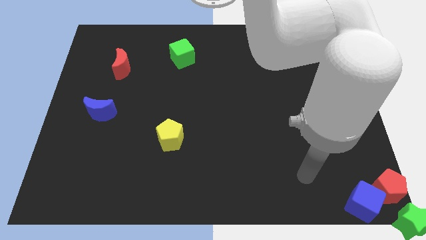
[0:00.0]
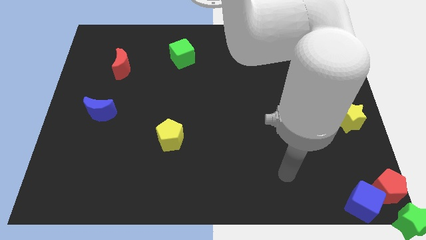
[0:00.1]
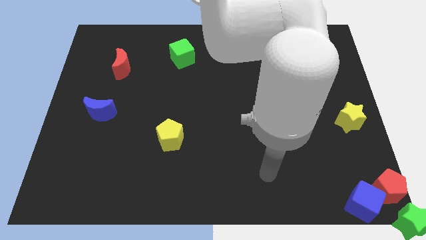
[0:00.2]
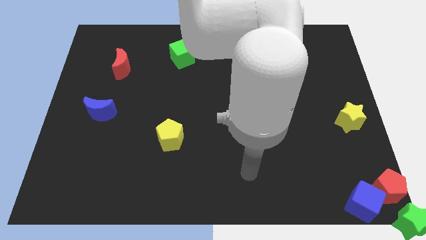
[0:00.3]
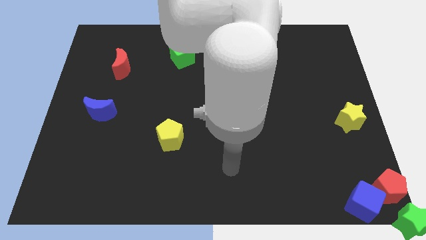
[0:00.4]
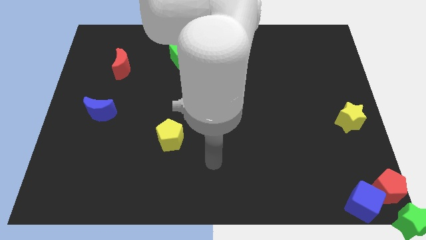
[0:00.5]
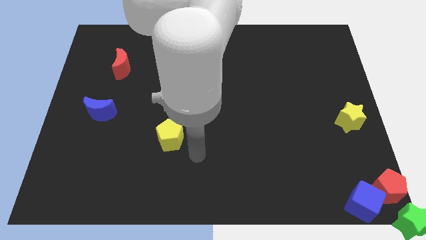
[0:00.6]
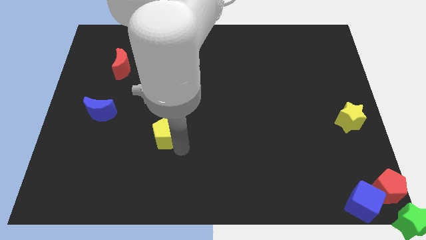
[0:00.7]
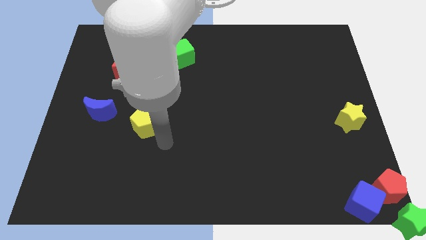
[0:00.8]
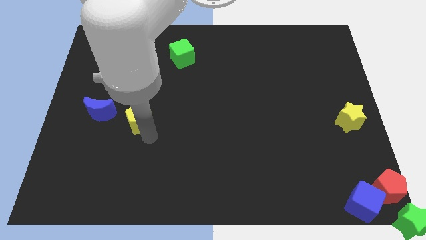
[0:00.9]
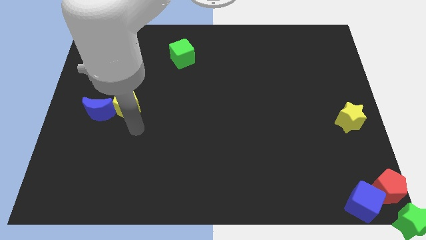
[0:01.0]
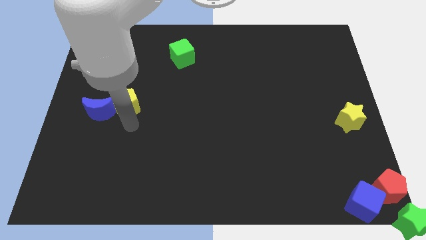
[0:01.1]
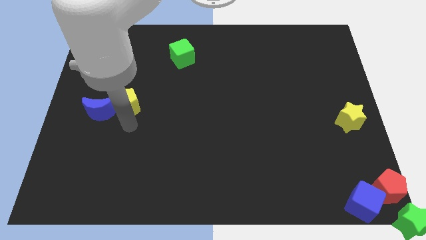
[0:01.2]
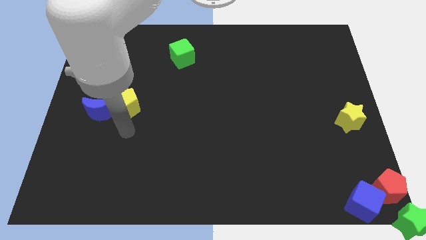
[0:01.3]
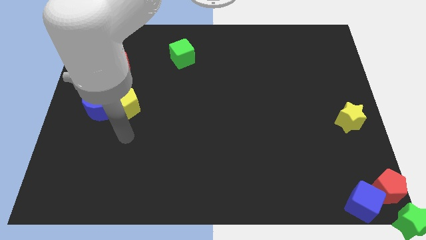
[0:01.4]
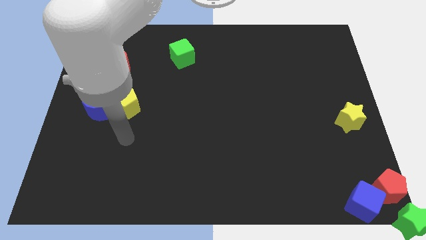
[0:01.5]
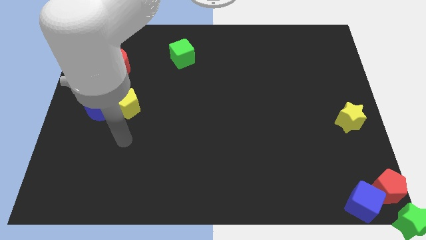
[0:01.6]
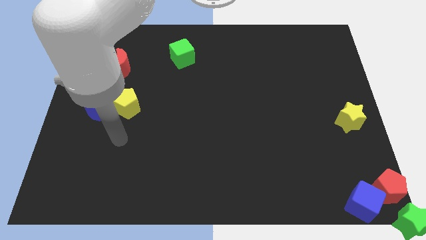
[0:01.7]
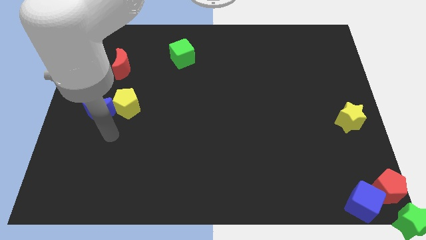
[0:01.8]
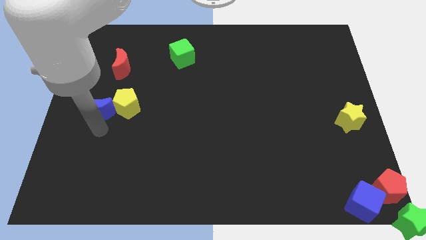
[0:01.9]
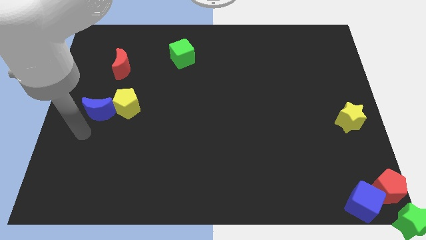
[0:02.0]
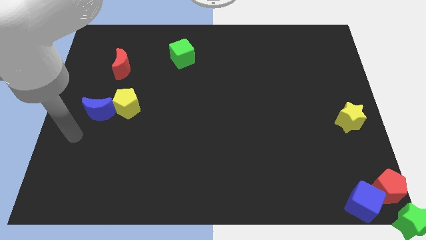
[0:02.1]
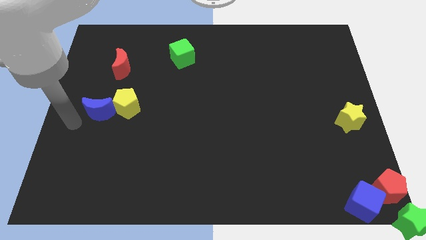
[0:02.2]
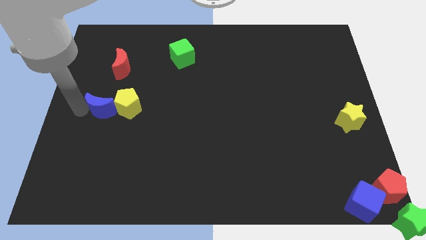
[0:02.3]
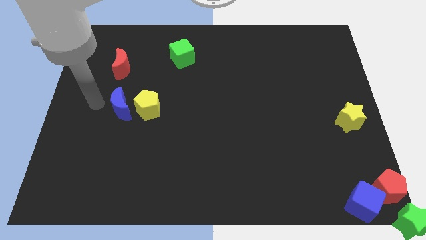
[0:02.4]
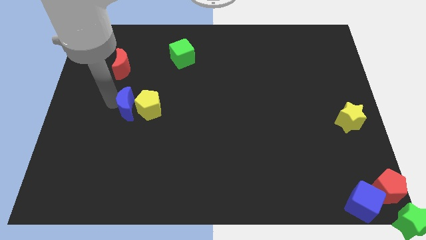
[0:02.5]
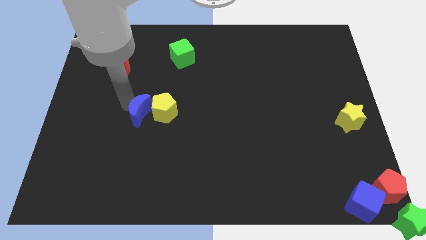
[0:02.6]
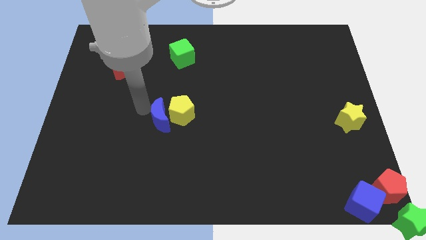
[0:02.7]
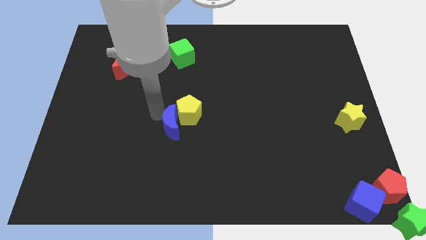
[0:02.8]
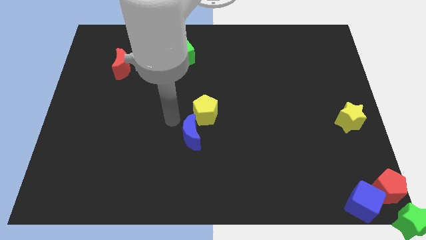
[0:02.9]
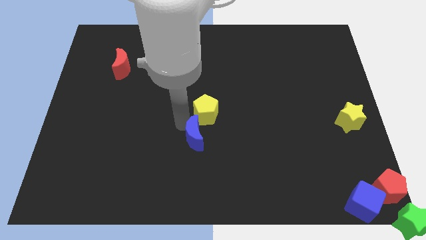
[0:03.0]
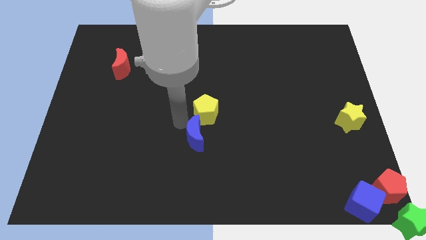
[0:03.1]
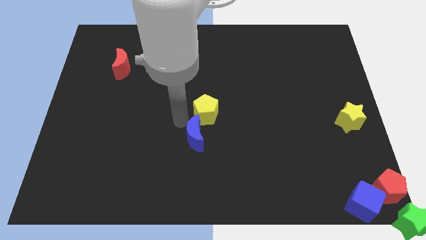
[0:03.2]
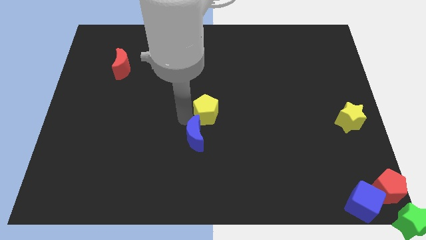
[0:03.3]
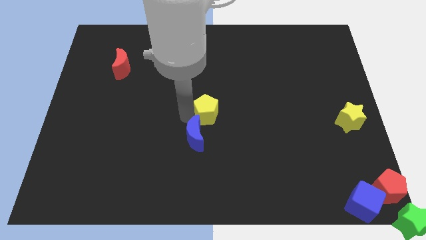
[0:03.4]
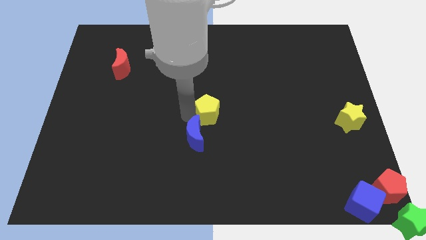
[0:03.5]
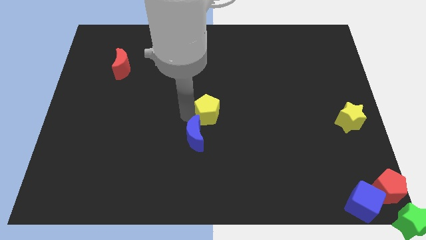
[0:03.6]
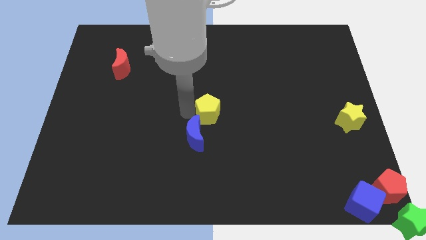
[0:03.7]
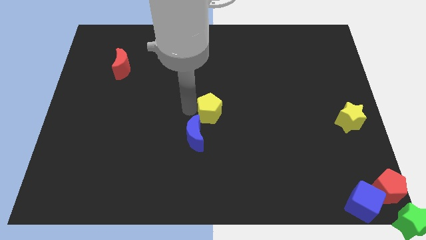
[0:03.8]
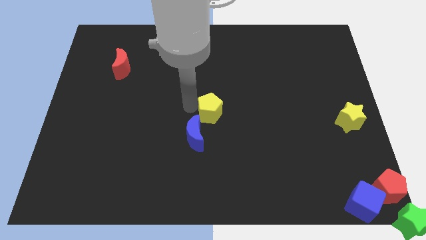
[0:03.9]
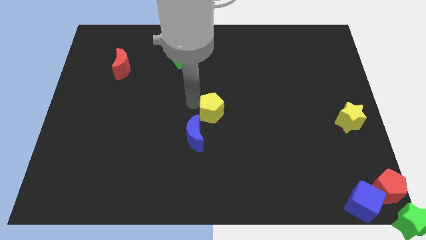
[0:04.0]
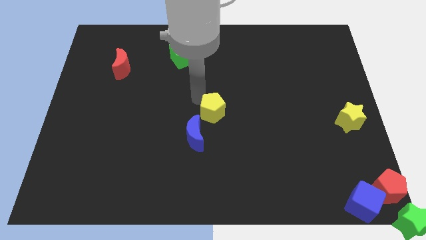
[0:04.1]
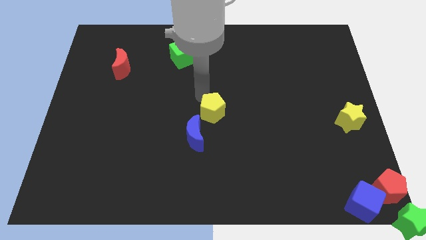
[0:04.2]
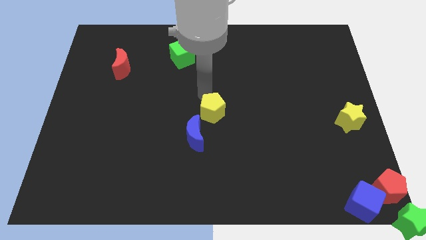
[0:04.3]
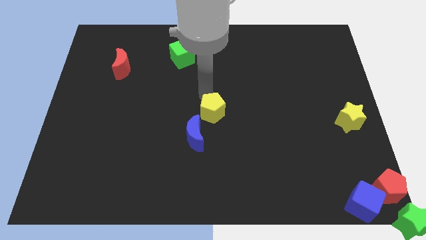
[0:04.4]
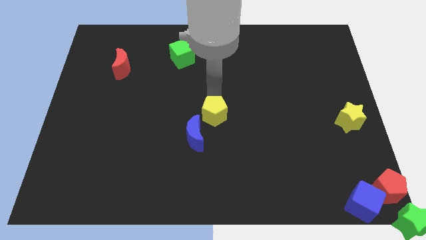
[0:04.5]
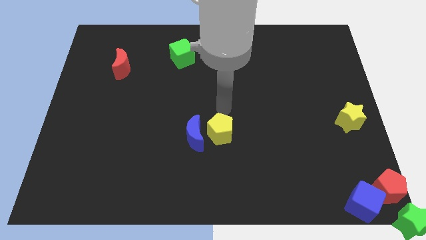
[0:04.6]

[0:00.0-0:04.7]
push the yellow pentagon to the center of the board

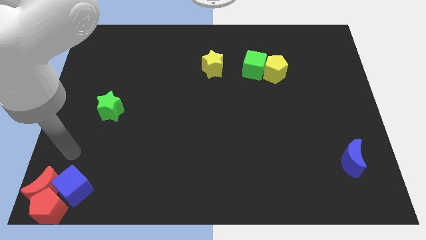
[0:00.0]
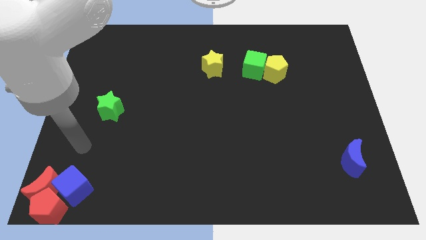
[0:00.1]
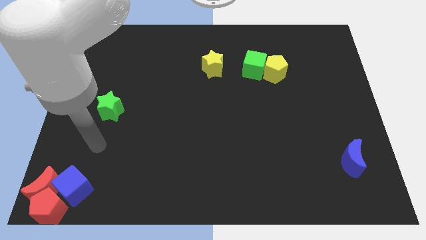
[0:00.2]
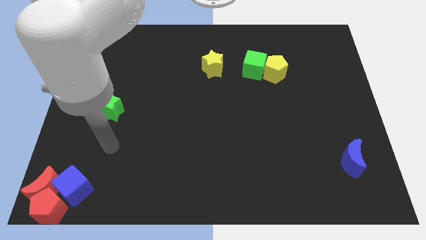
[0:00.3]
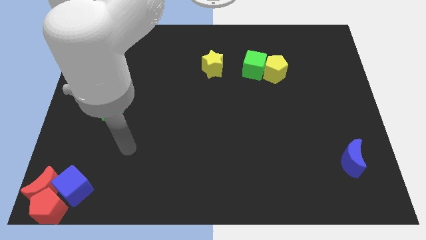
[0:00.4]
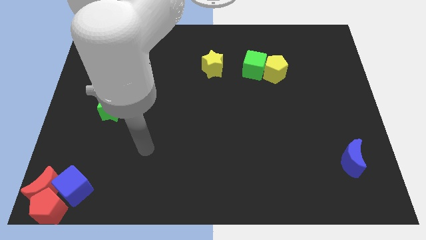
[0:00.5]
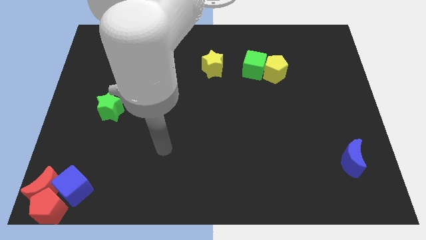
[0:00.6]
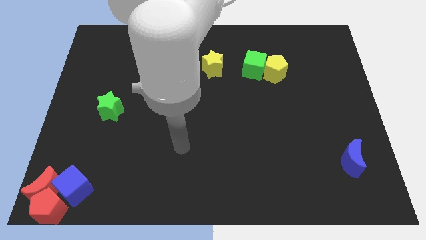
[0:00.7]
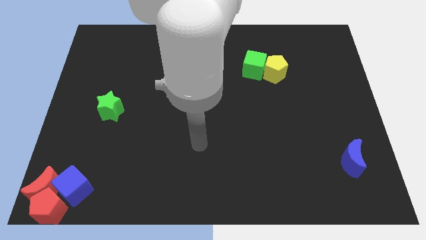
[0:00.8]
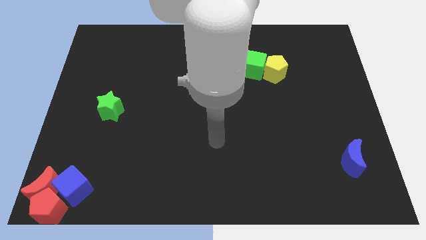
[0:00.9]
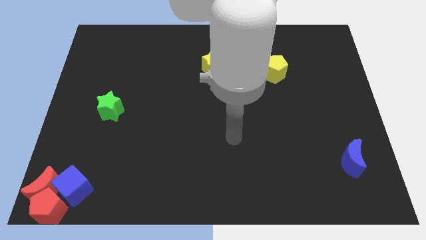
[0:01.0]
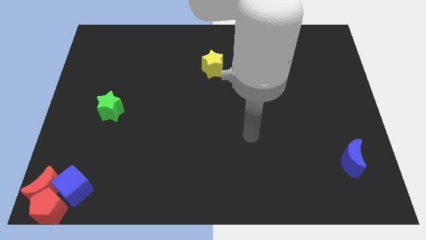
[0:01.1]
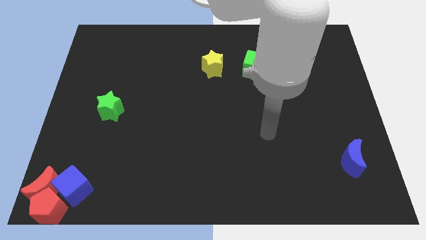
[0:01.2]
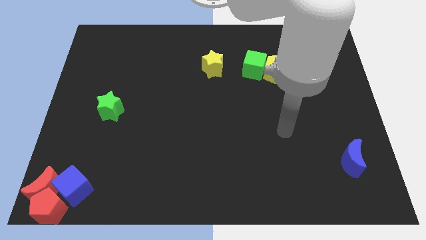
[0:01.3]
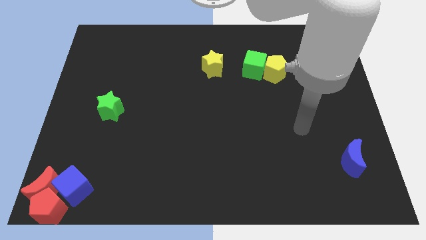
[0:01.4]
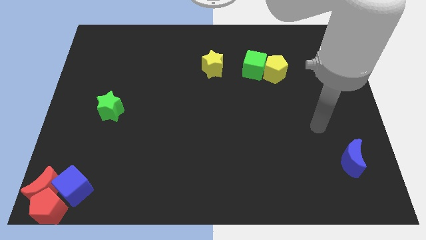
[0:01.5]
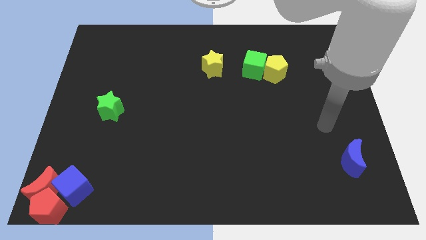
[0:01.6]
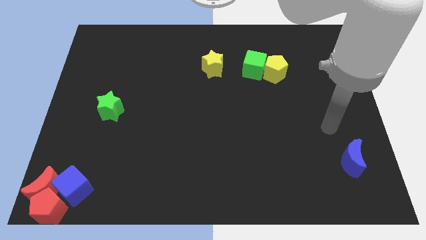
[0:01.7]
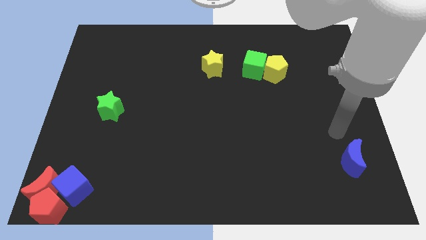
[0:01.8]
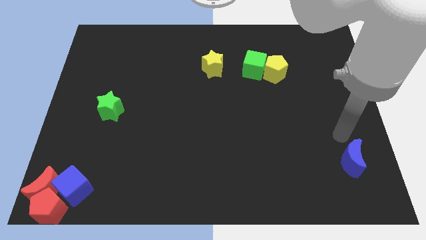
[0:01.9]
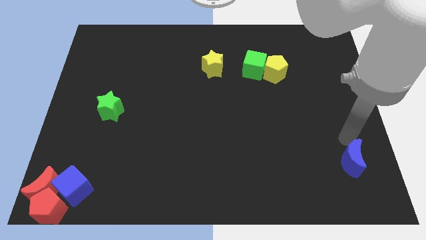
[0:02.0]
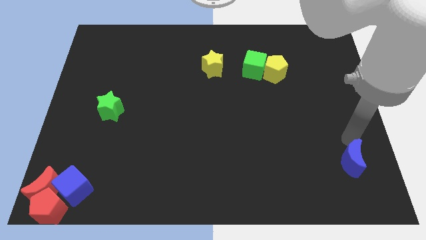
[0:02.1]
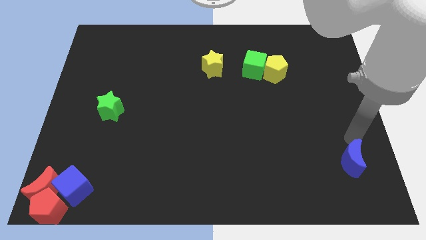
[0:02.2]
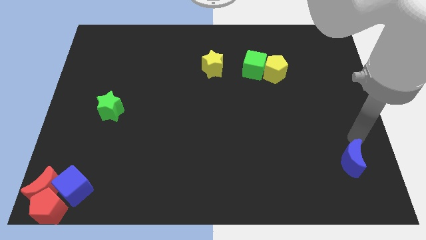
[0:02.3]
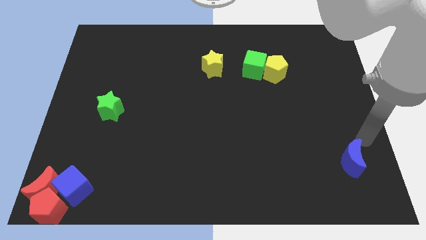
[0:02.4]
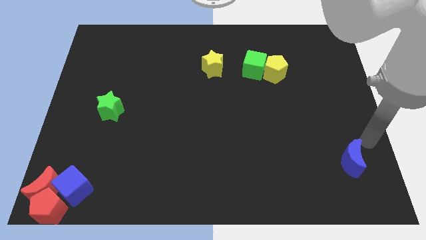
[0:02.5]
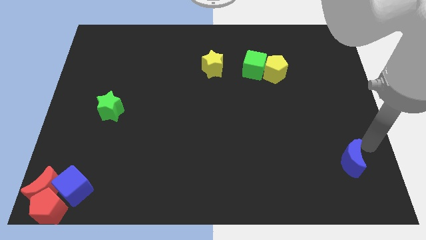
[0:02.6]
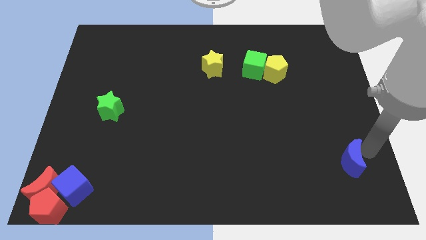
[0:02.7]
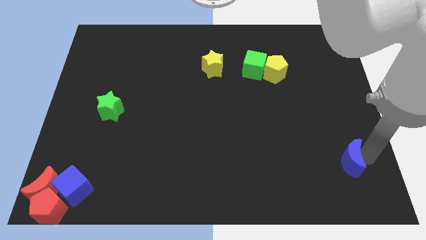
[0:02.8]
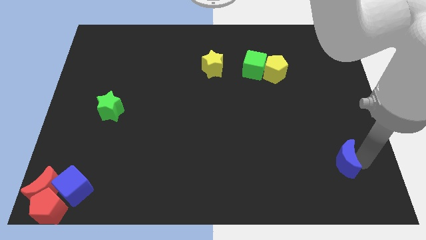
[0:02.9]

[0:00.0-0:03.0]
move your arm and point to the right of the blue moon

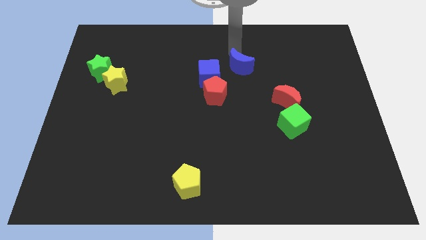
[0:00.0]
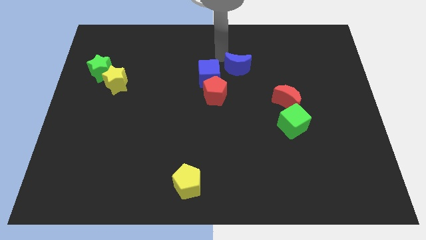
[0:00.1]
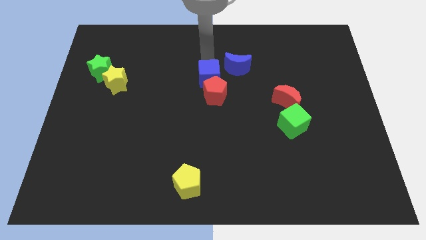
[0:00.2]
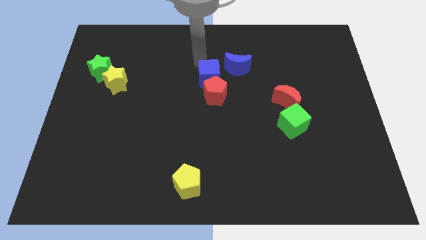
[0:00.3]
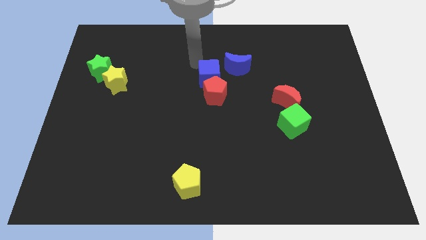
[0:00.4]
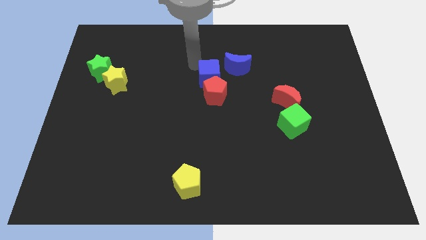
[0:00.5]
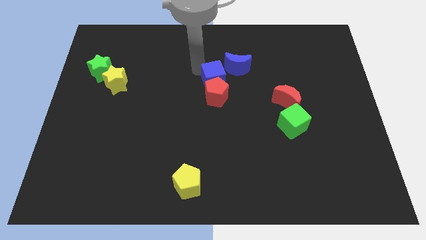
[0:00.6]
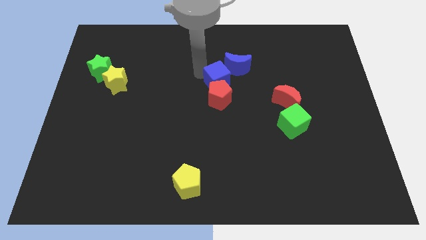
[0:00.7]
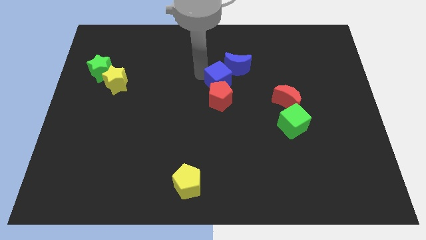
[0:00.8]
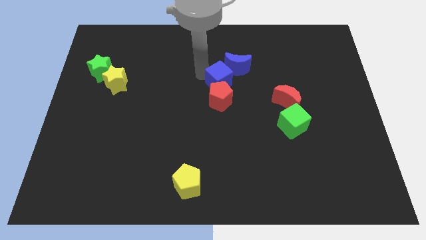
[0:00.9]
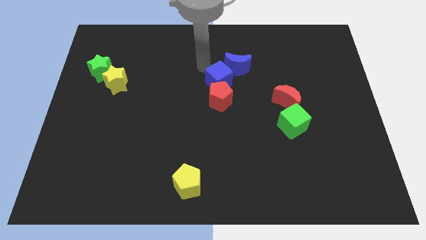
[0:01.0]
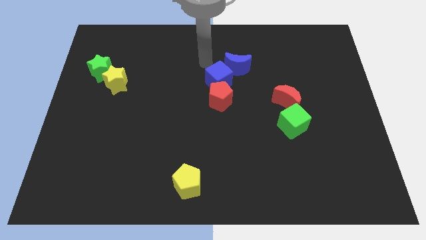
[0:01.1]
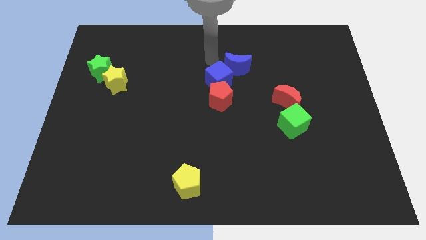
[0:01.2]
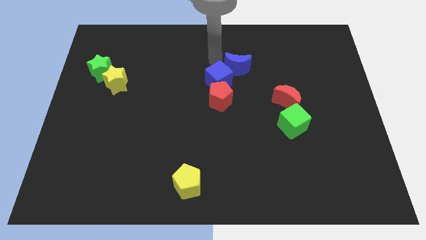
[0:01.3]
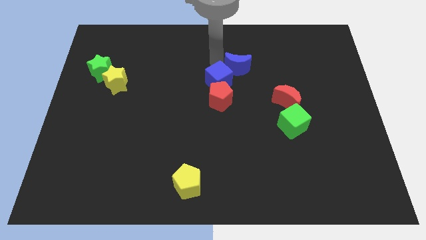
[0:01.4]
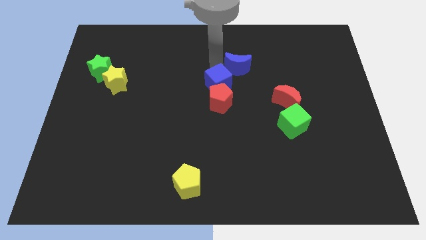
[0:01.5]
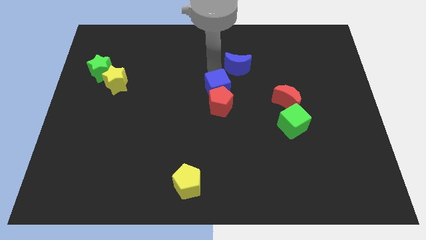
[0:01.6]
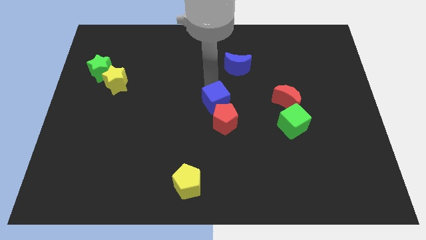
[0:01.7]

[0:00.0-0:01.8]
push the blue cube towards blue moon red pentagon
